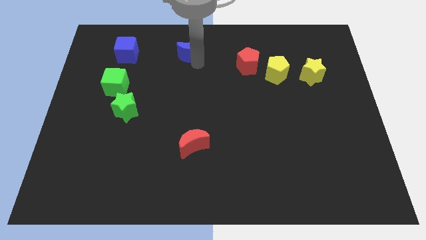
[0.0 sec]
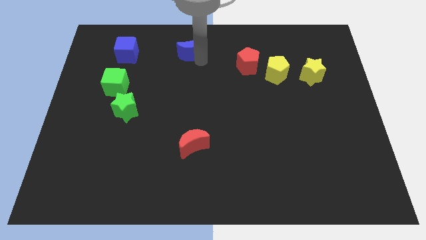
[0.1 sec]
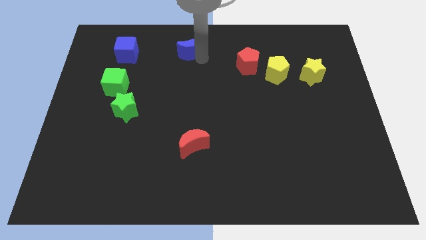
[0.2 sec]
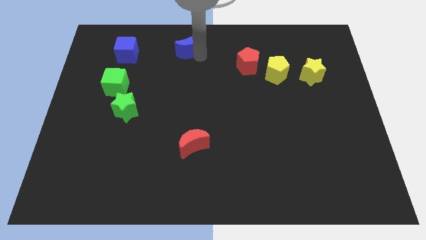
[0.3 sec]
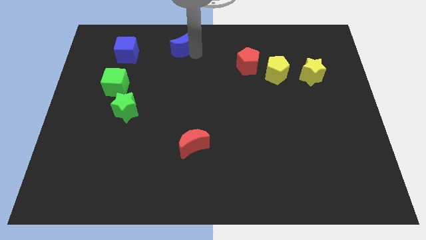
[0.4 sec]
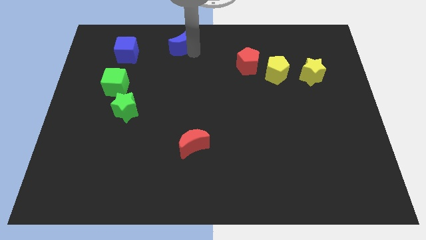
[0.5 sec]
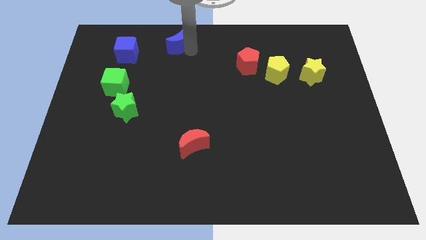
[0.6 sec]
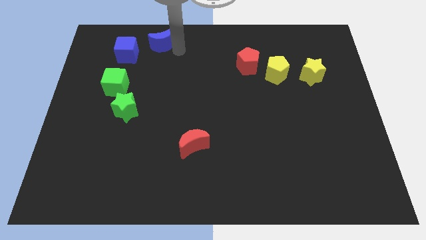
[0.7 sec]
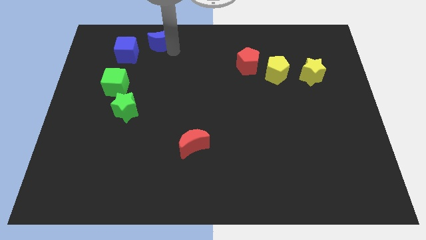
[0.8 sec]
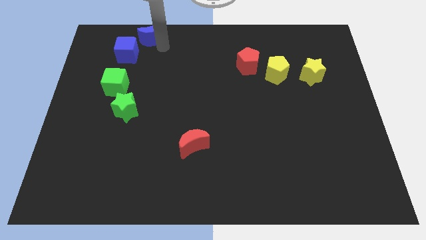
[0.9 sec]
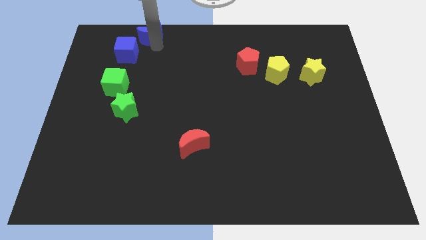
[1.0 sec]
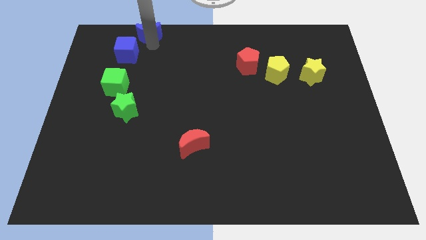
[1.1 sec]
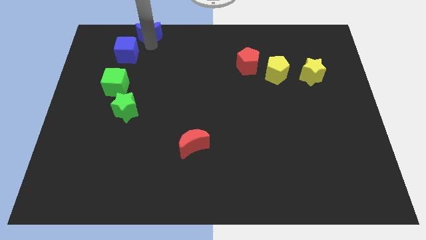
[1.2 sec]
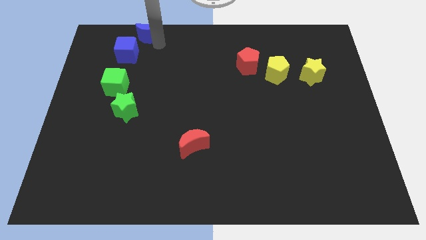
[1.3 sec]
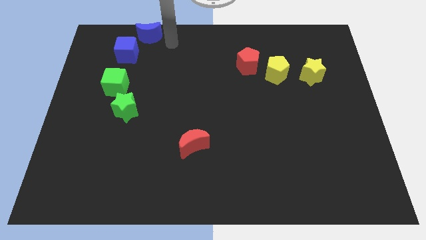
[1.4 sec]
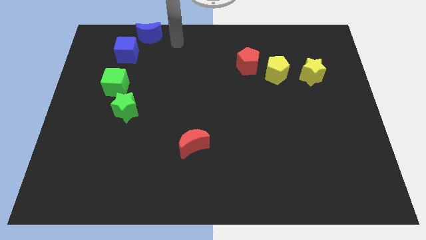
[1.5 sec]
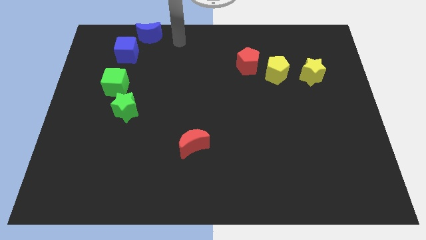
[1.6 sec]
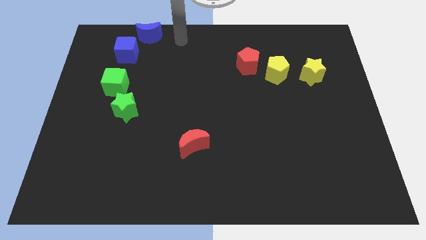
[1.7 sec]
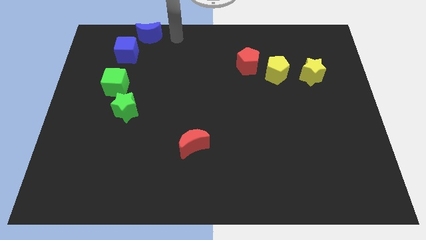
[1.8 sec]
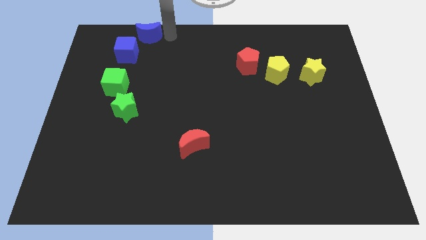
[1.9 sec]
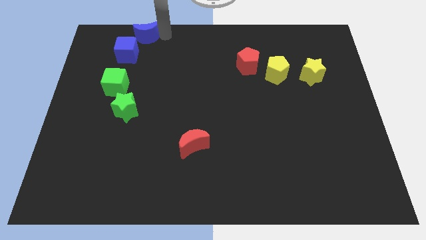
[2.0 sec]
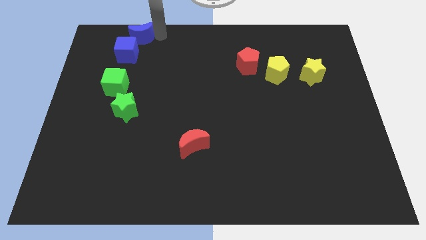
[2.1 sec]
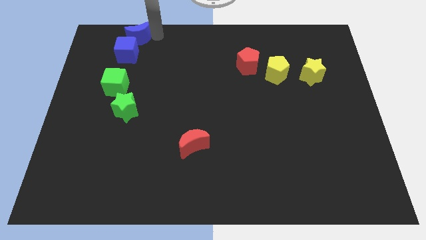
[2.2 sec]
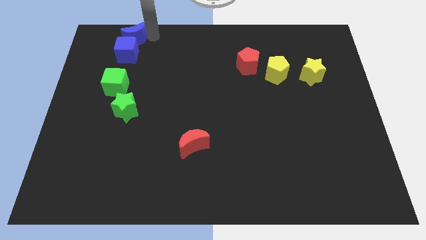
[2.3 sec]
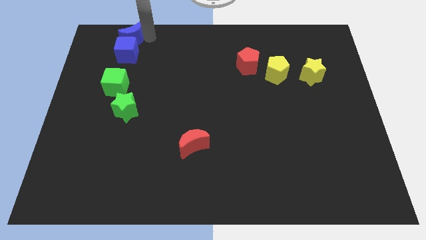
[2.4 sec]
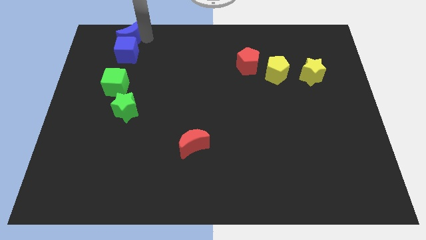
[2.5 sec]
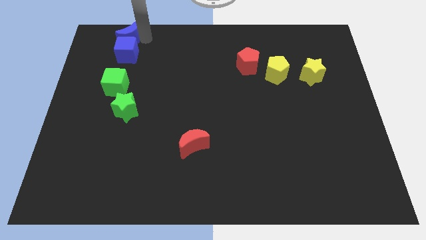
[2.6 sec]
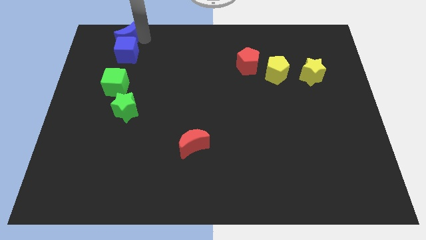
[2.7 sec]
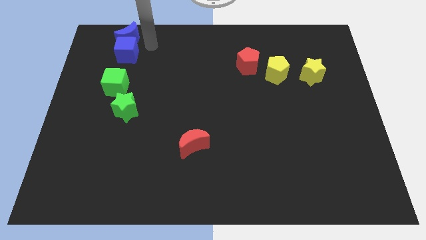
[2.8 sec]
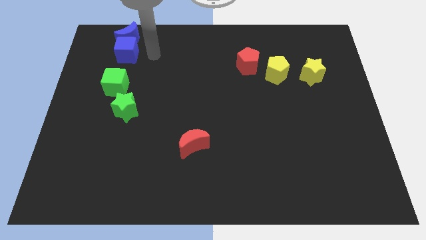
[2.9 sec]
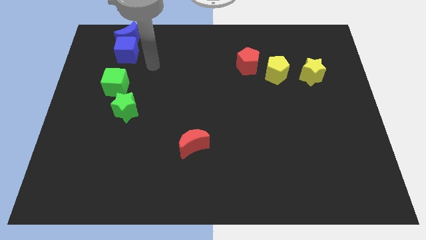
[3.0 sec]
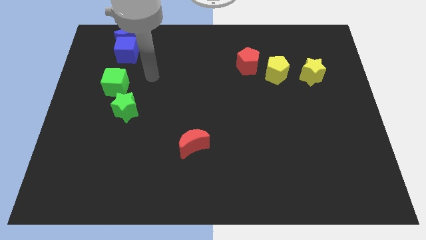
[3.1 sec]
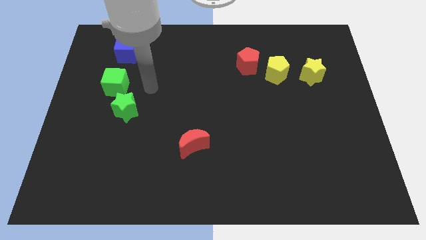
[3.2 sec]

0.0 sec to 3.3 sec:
push the blue crescent to the top side of blue cube

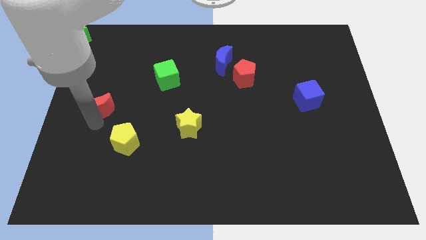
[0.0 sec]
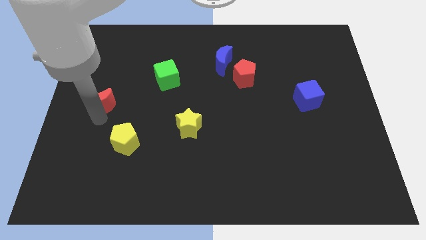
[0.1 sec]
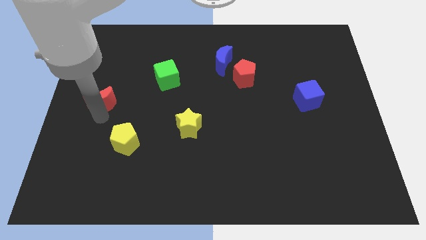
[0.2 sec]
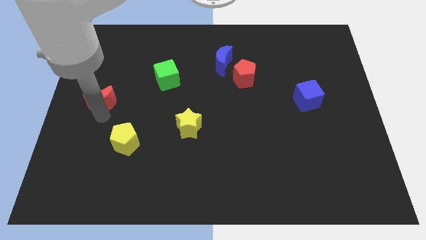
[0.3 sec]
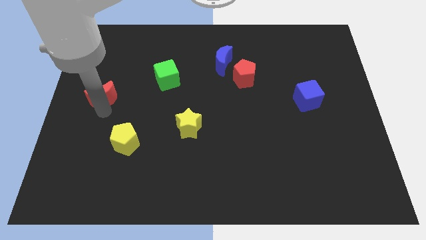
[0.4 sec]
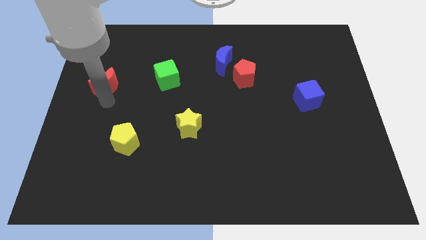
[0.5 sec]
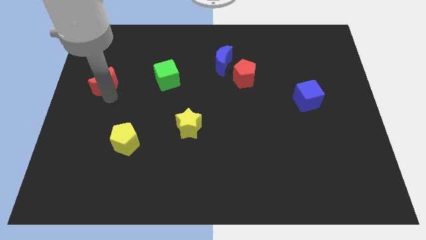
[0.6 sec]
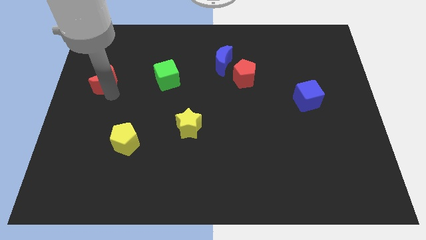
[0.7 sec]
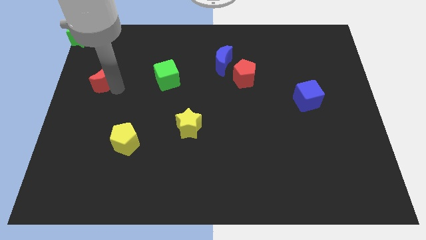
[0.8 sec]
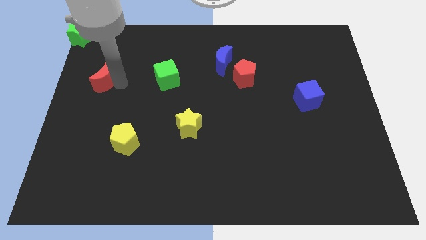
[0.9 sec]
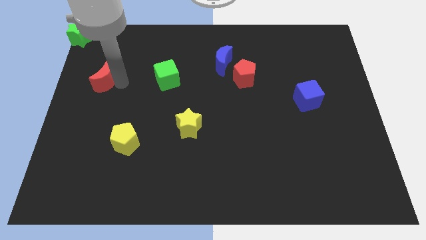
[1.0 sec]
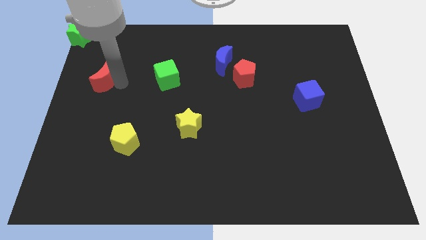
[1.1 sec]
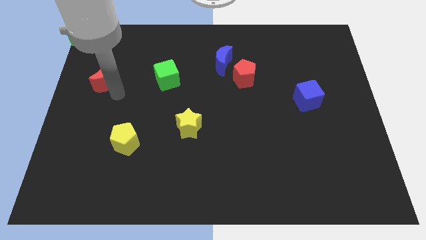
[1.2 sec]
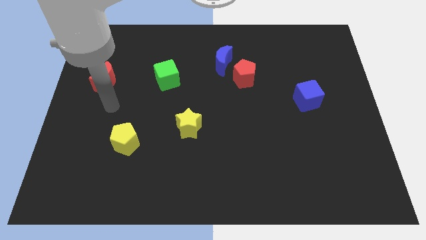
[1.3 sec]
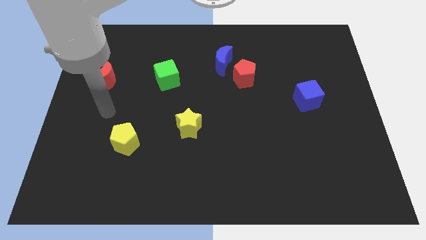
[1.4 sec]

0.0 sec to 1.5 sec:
move the red moon to the left of the green cube

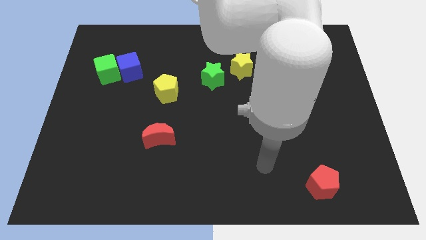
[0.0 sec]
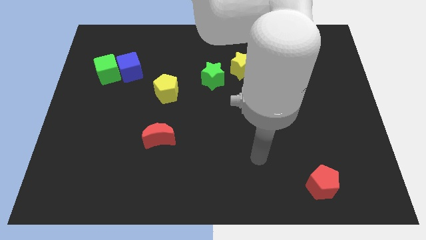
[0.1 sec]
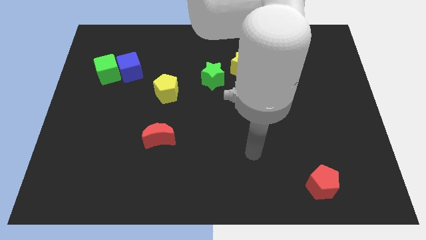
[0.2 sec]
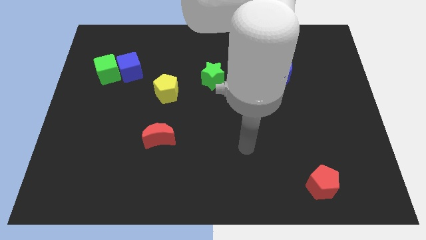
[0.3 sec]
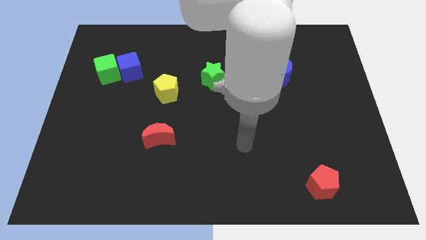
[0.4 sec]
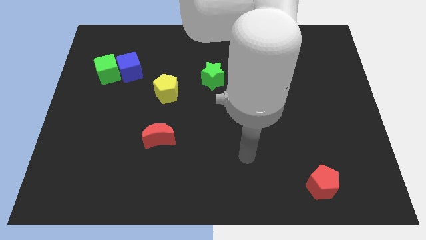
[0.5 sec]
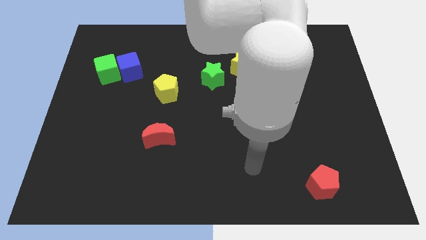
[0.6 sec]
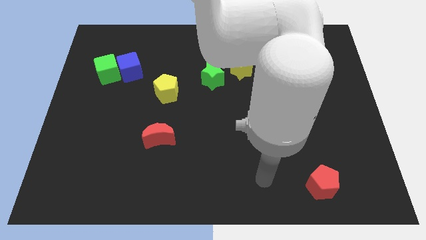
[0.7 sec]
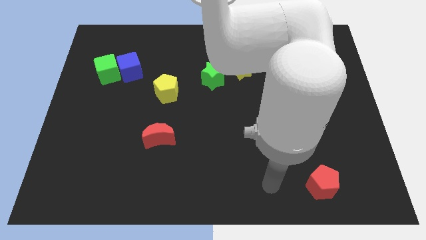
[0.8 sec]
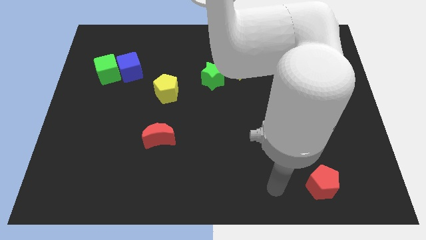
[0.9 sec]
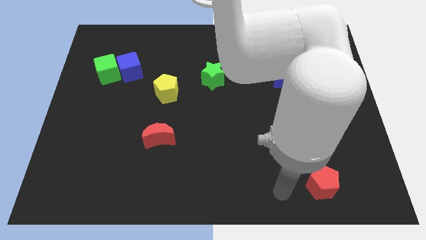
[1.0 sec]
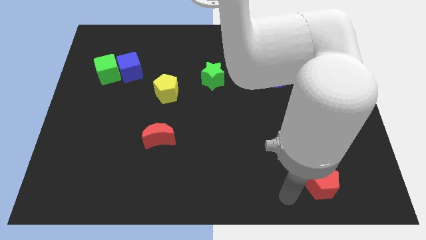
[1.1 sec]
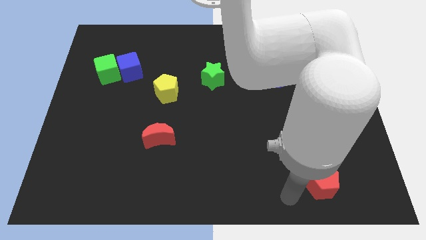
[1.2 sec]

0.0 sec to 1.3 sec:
point the arm to the left of the red pentagon

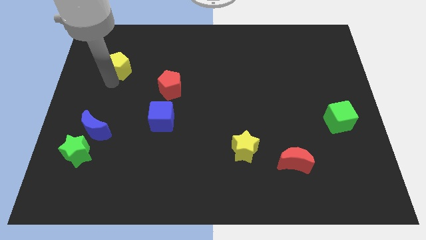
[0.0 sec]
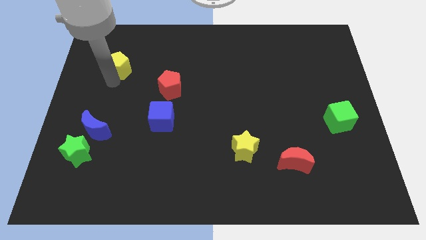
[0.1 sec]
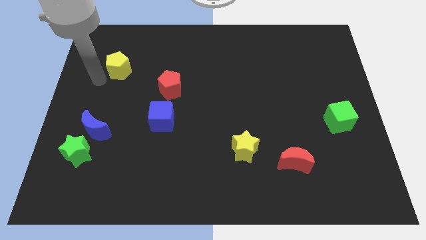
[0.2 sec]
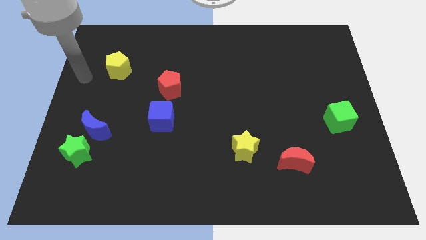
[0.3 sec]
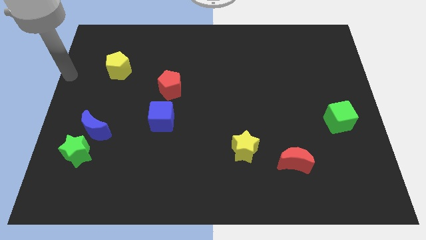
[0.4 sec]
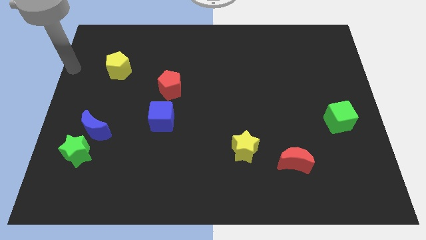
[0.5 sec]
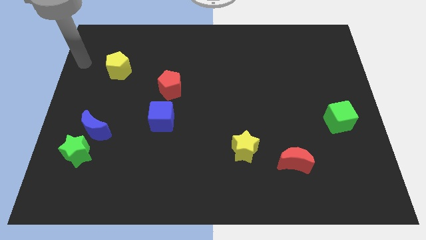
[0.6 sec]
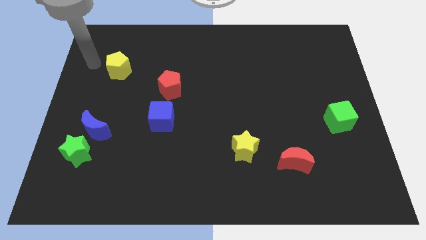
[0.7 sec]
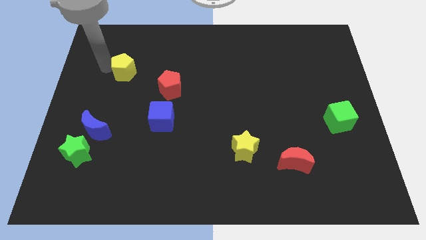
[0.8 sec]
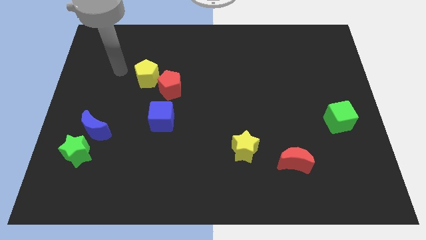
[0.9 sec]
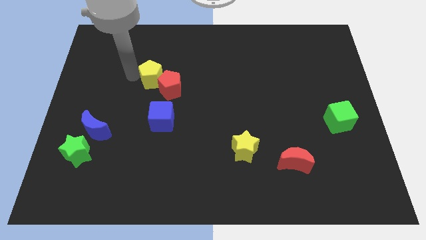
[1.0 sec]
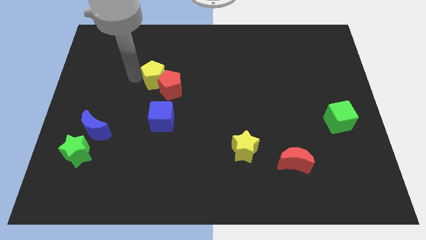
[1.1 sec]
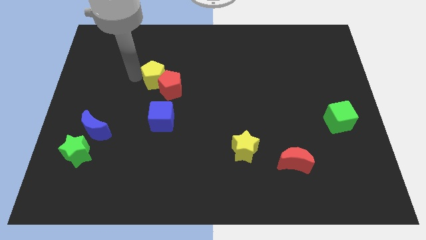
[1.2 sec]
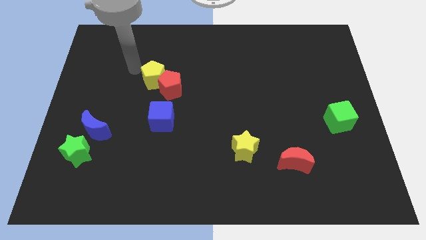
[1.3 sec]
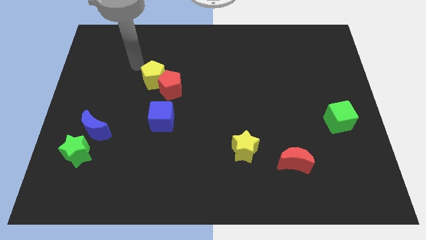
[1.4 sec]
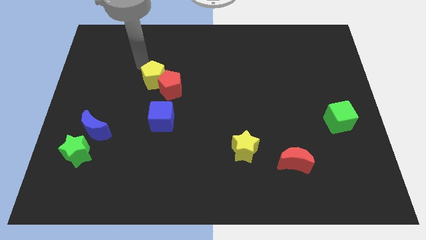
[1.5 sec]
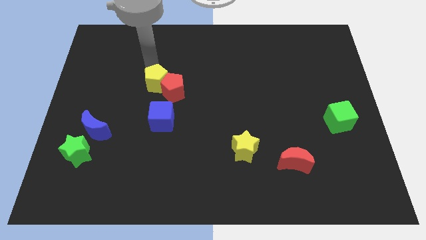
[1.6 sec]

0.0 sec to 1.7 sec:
slide the yellow pentagon into the left side of the red pentagon

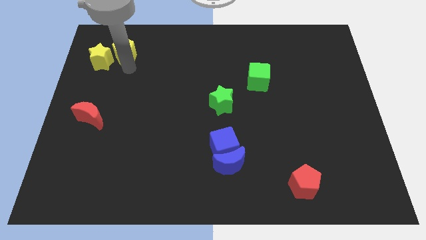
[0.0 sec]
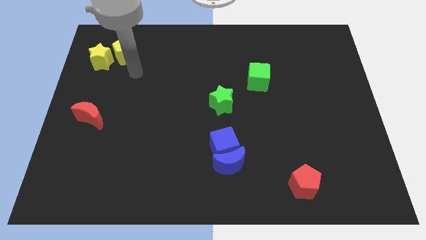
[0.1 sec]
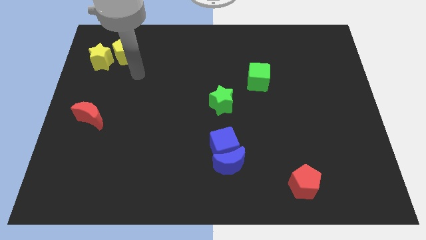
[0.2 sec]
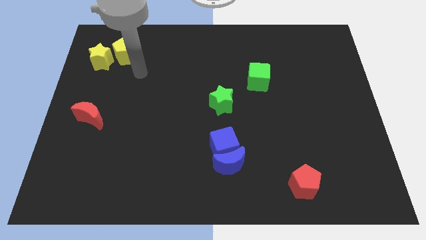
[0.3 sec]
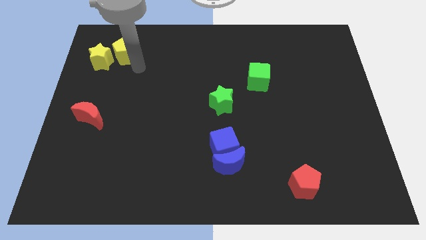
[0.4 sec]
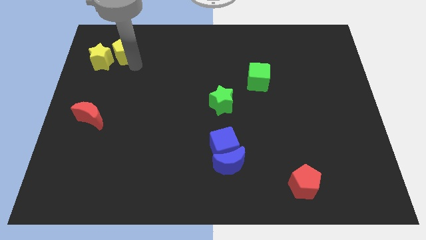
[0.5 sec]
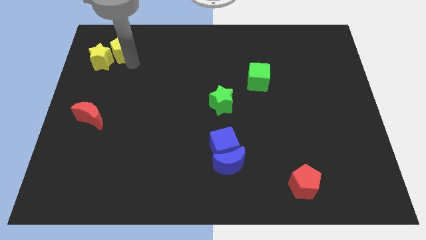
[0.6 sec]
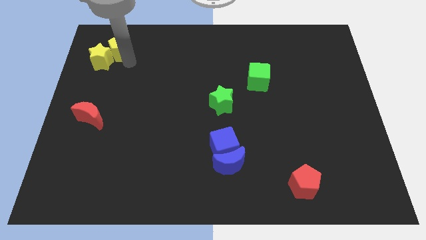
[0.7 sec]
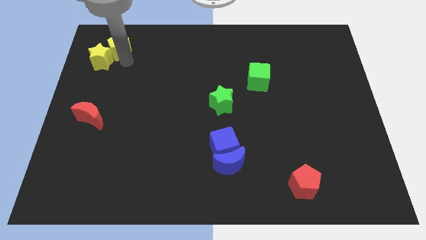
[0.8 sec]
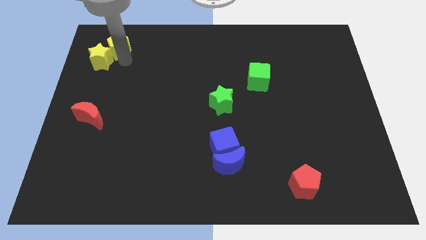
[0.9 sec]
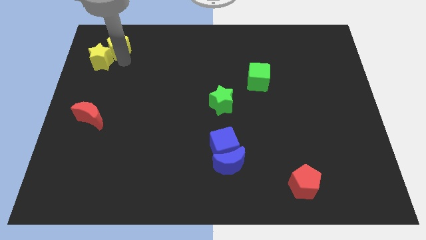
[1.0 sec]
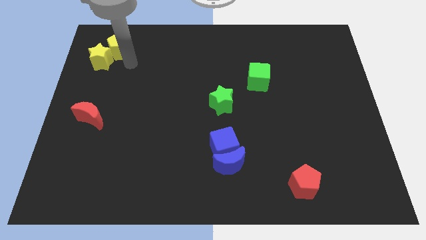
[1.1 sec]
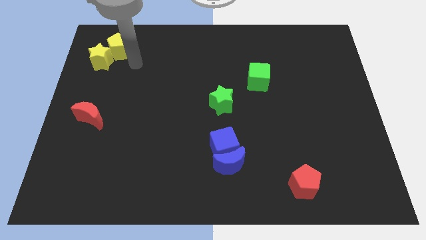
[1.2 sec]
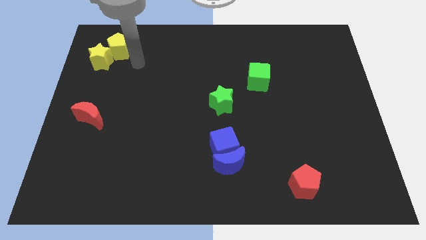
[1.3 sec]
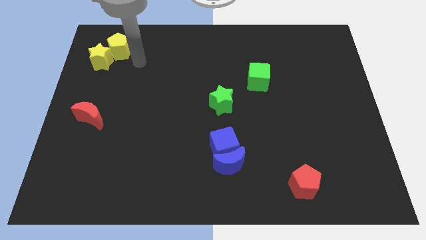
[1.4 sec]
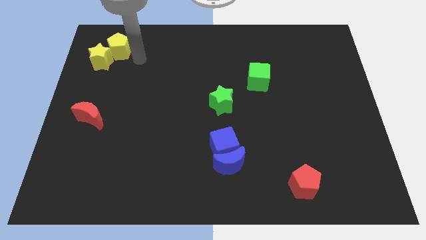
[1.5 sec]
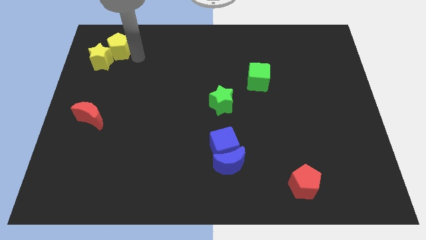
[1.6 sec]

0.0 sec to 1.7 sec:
slide the yellow pentagon up slightly
